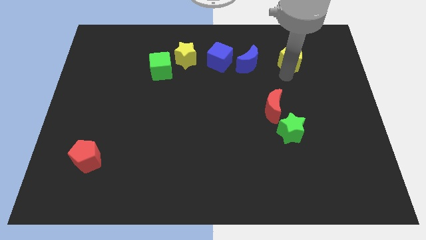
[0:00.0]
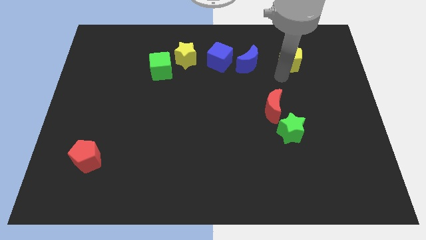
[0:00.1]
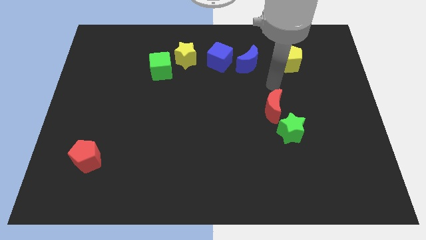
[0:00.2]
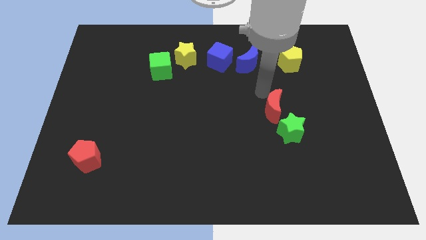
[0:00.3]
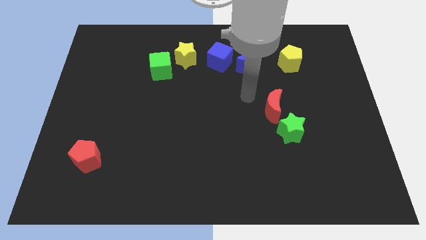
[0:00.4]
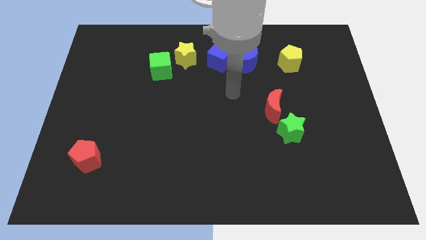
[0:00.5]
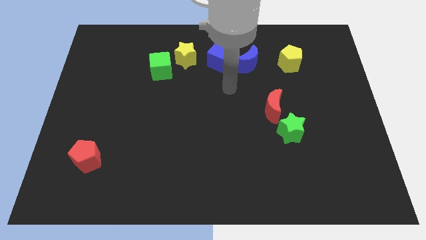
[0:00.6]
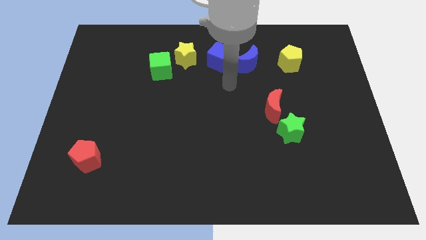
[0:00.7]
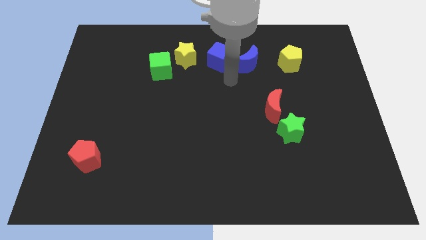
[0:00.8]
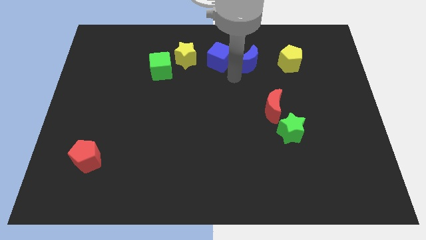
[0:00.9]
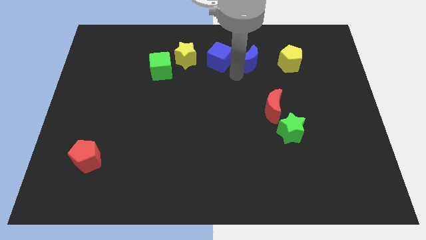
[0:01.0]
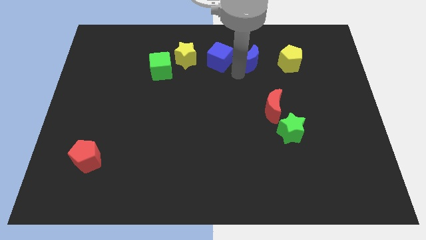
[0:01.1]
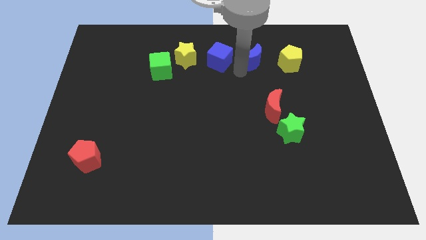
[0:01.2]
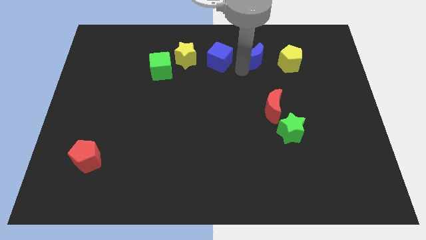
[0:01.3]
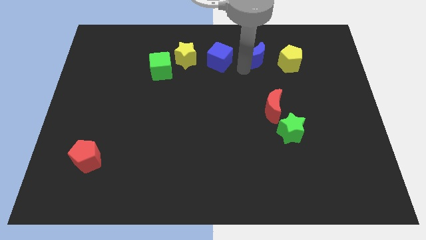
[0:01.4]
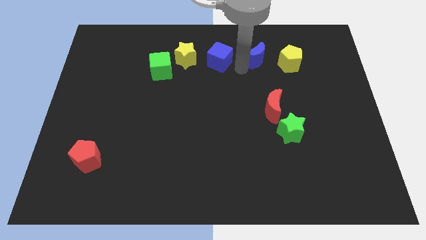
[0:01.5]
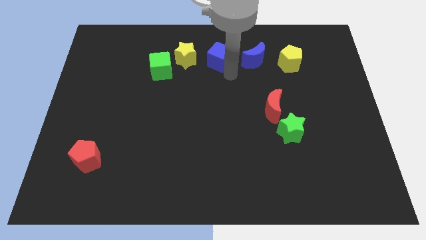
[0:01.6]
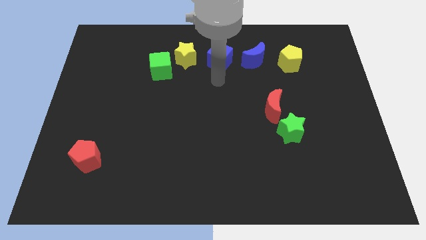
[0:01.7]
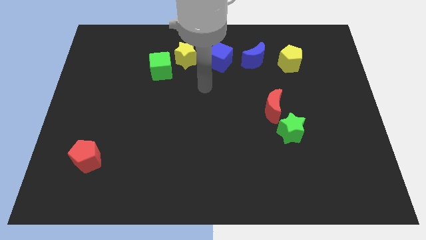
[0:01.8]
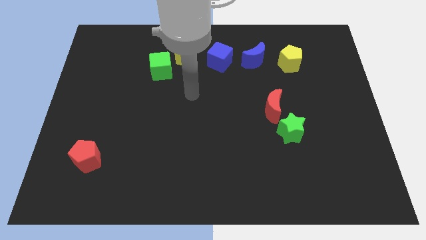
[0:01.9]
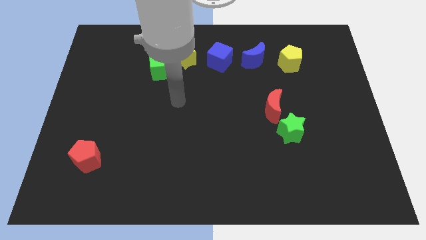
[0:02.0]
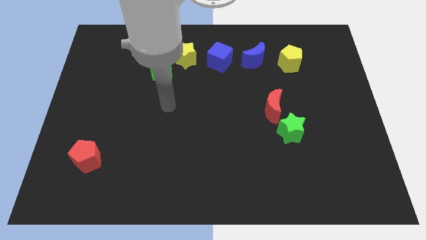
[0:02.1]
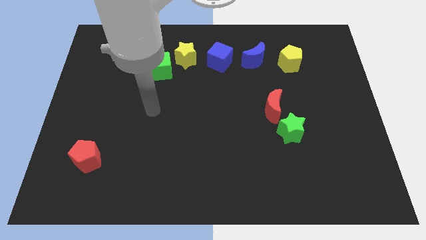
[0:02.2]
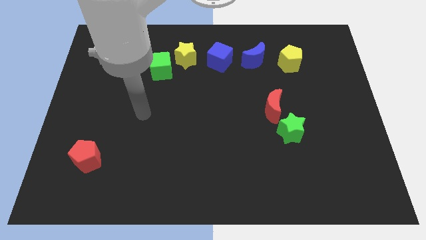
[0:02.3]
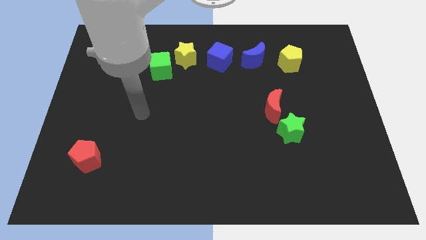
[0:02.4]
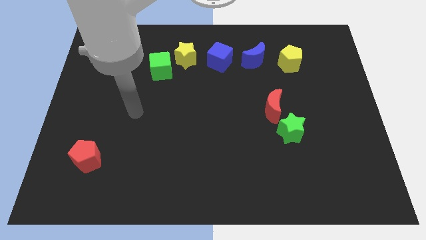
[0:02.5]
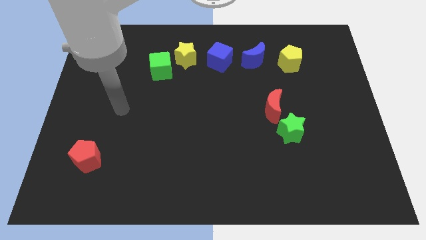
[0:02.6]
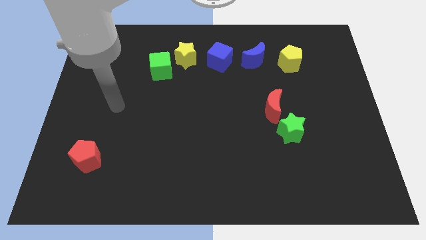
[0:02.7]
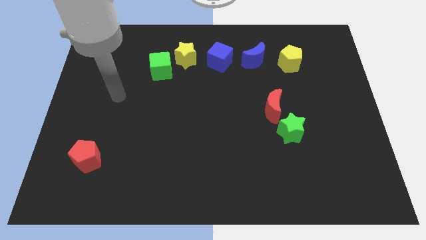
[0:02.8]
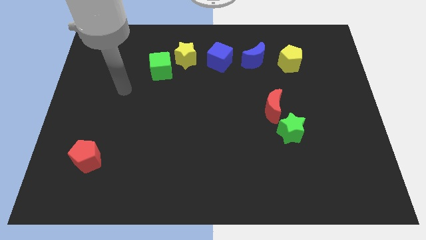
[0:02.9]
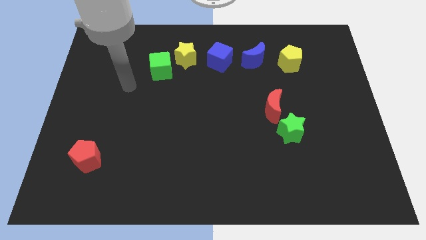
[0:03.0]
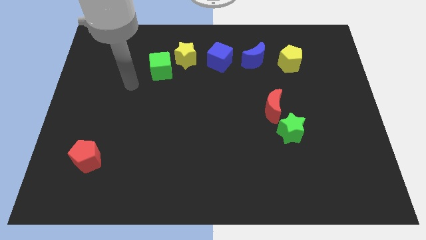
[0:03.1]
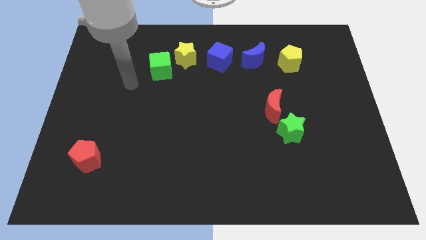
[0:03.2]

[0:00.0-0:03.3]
move the blue moon slightly between the blue cube and yellow pentagon

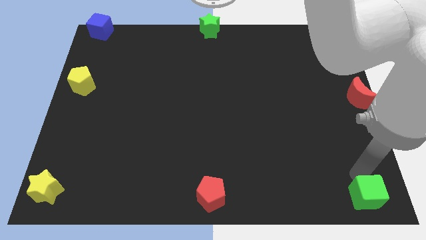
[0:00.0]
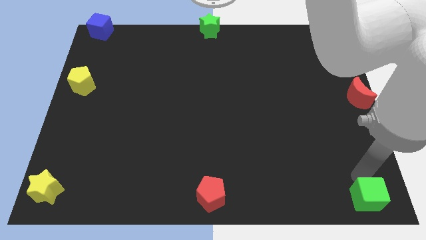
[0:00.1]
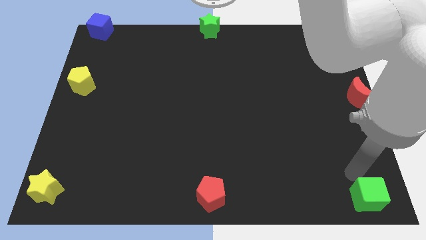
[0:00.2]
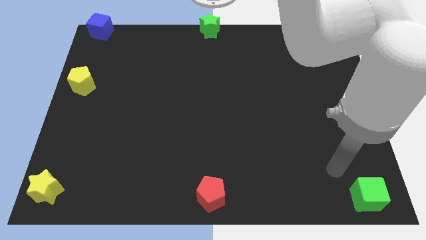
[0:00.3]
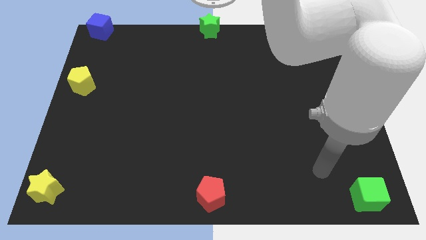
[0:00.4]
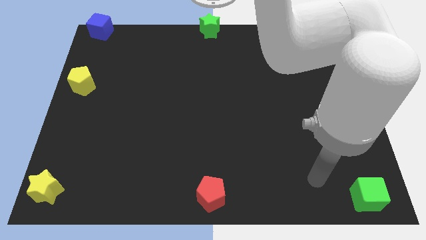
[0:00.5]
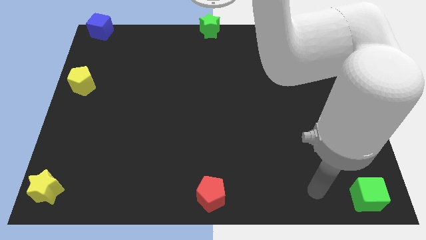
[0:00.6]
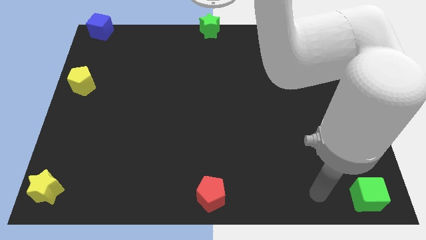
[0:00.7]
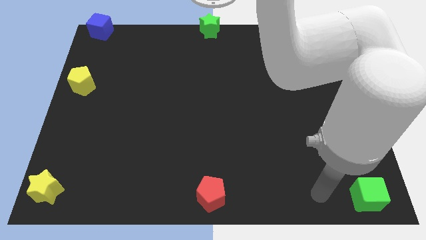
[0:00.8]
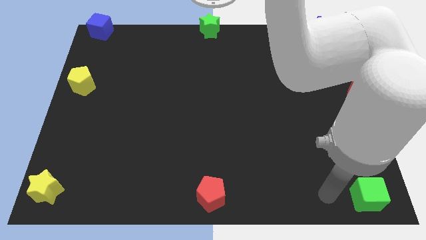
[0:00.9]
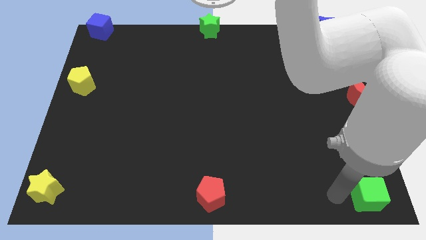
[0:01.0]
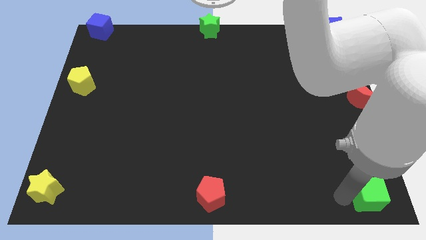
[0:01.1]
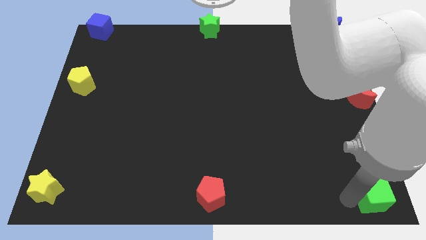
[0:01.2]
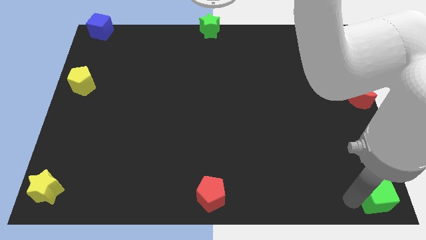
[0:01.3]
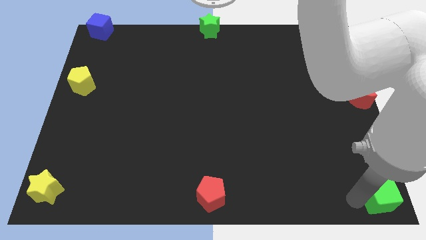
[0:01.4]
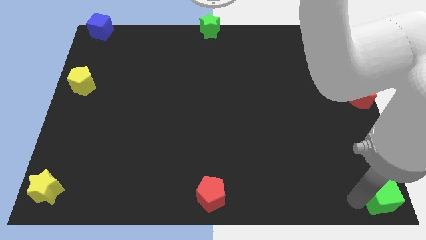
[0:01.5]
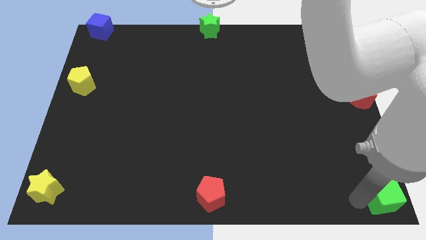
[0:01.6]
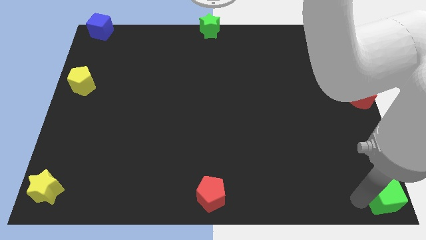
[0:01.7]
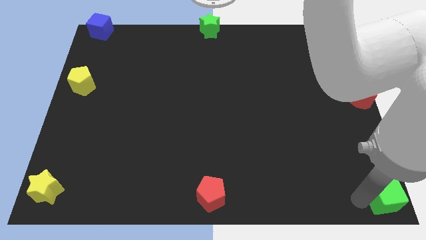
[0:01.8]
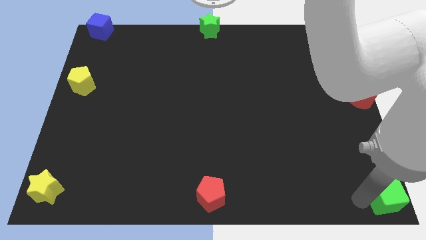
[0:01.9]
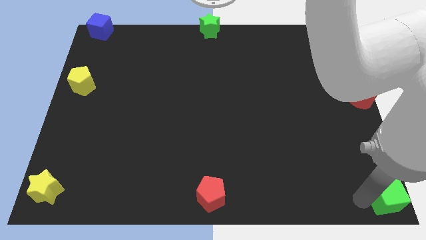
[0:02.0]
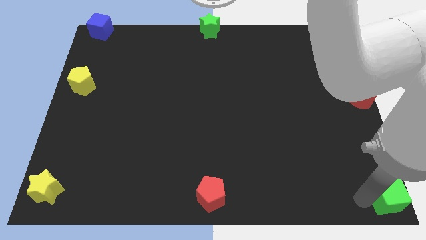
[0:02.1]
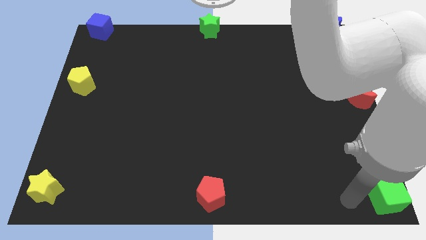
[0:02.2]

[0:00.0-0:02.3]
place green cube towards bottom right corner

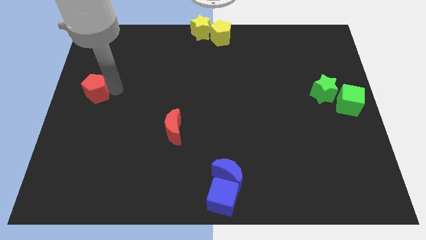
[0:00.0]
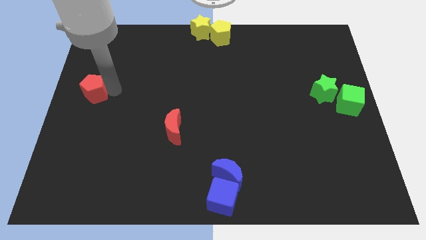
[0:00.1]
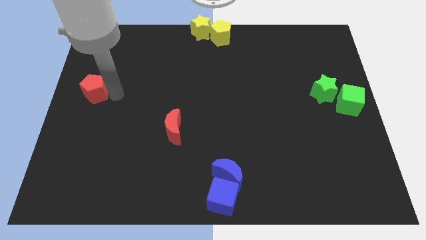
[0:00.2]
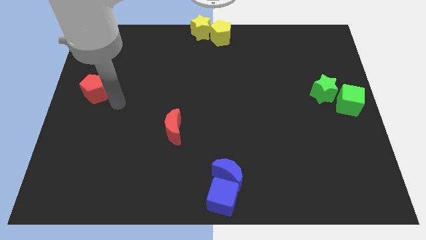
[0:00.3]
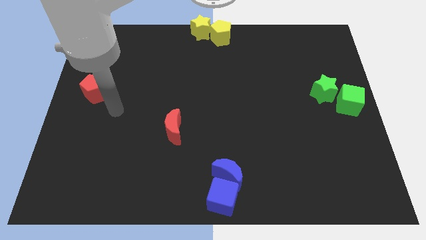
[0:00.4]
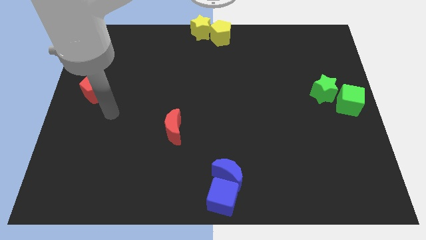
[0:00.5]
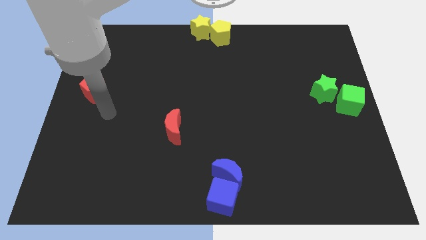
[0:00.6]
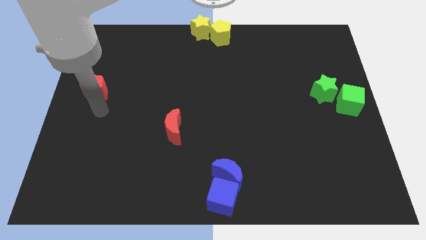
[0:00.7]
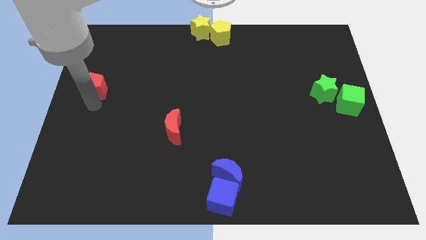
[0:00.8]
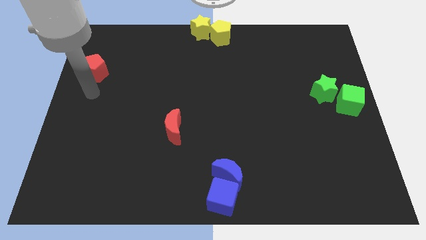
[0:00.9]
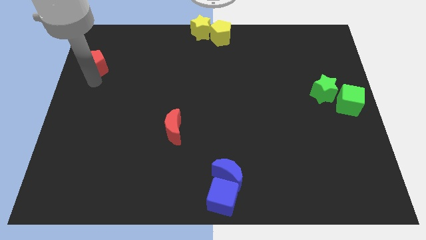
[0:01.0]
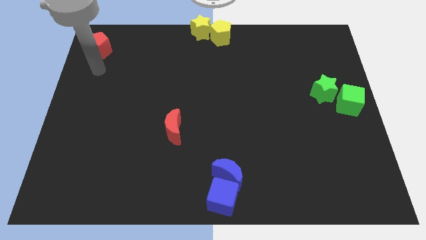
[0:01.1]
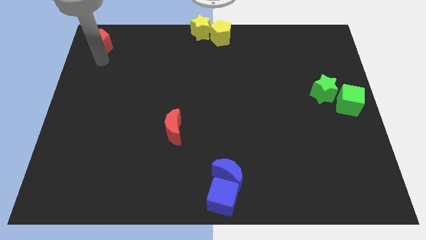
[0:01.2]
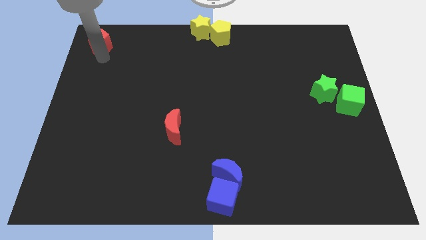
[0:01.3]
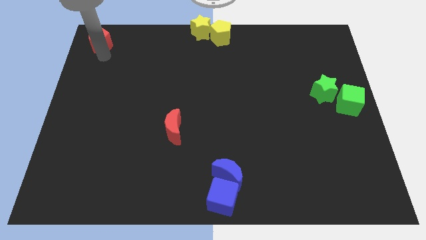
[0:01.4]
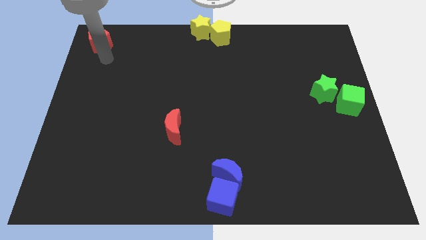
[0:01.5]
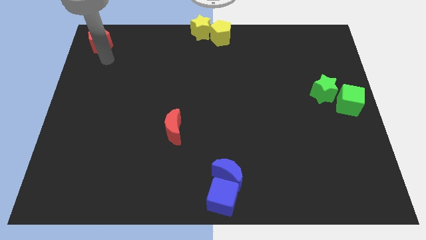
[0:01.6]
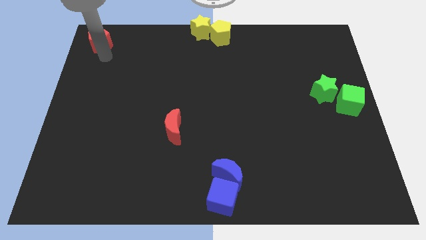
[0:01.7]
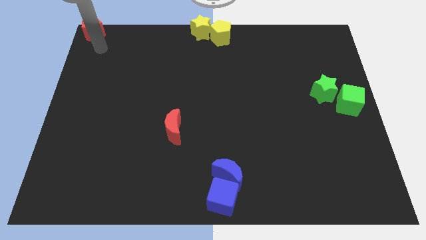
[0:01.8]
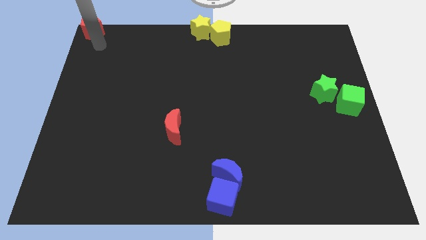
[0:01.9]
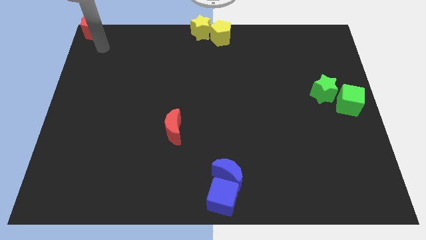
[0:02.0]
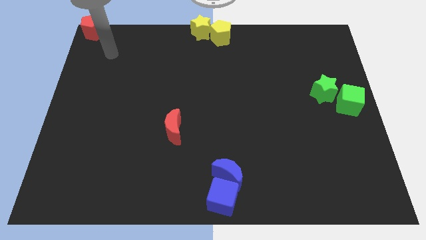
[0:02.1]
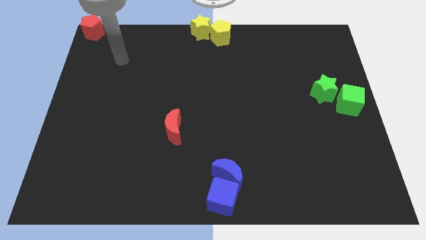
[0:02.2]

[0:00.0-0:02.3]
place the red pentagon to the top left of the board

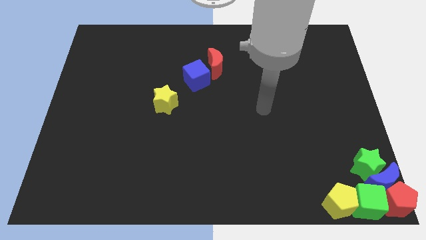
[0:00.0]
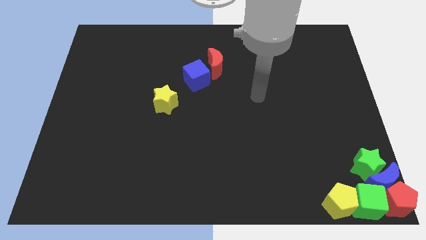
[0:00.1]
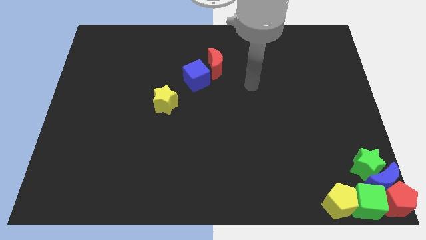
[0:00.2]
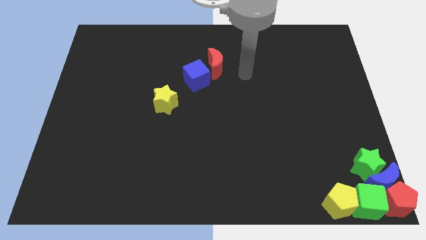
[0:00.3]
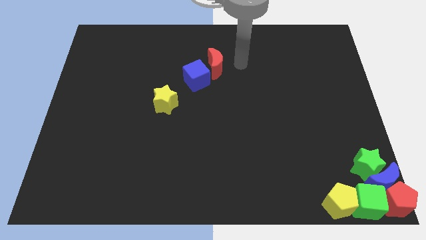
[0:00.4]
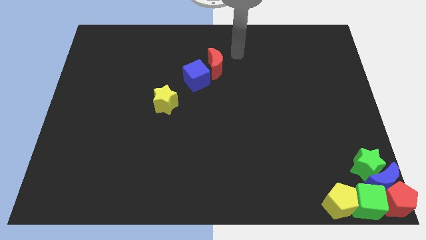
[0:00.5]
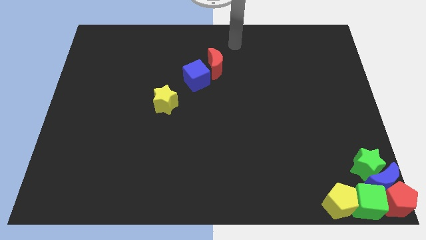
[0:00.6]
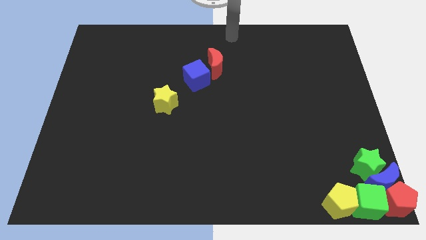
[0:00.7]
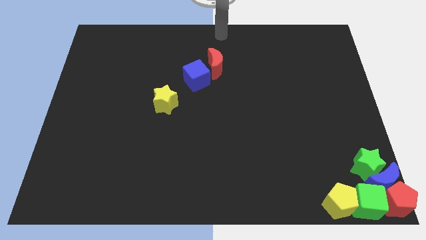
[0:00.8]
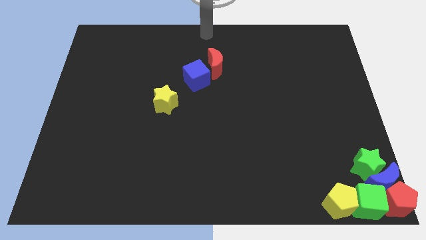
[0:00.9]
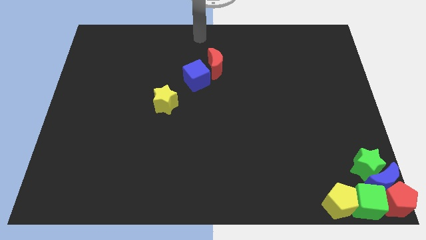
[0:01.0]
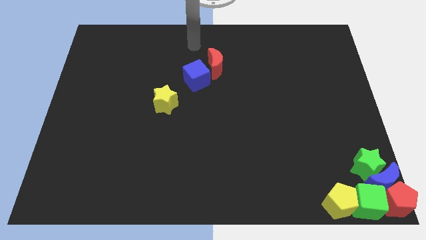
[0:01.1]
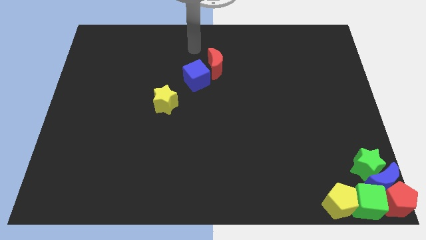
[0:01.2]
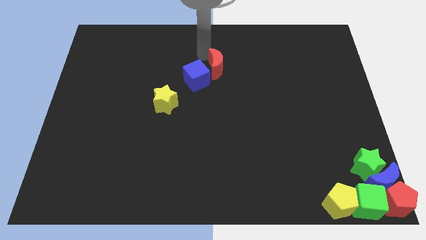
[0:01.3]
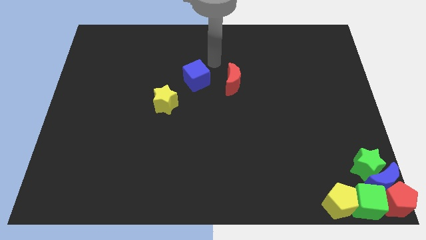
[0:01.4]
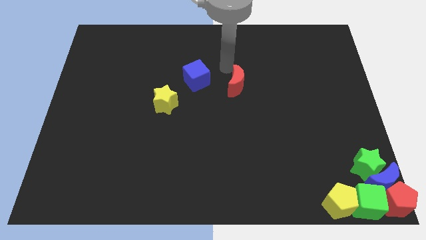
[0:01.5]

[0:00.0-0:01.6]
move the red crescent to the right of the blue cube
